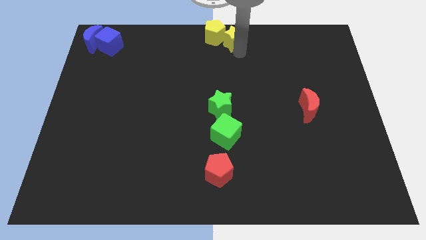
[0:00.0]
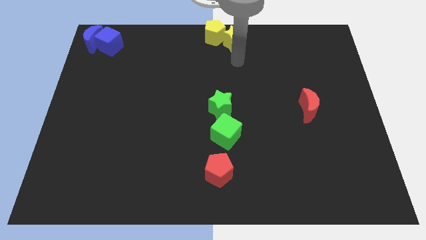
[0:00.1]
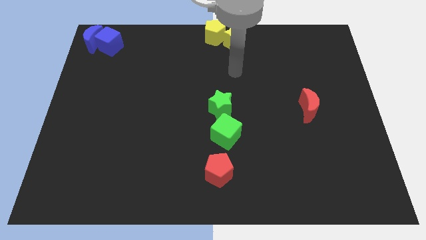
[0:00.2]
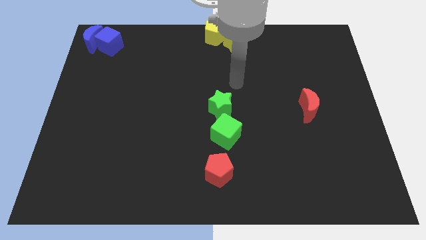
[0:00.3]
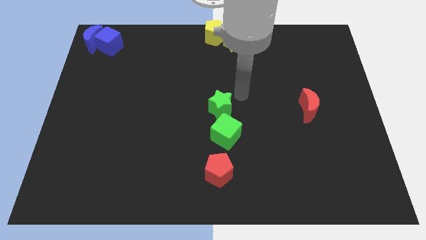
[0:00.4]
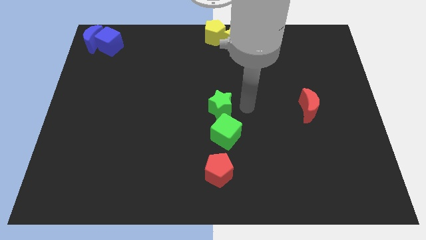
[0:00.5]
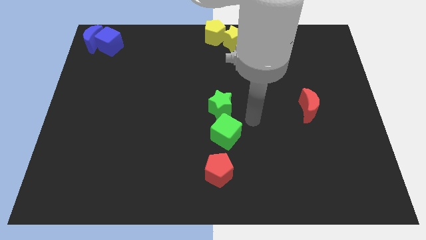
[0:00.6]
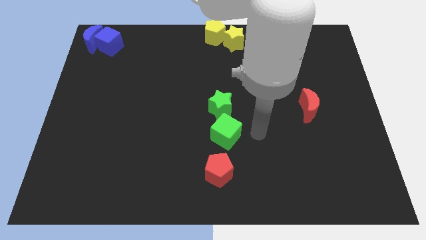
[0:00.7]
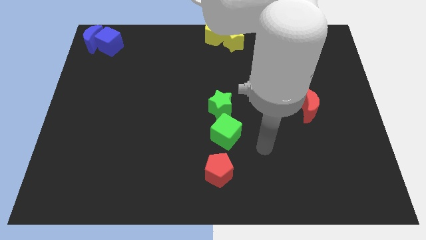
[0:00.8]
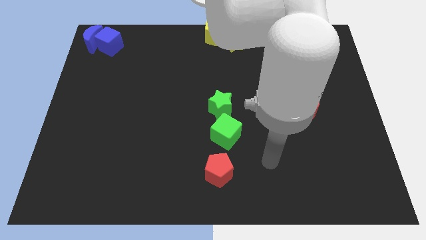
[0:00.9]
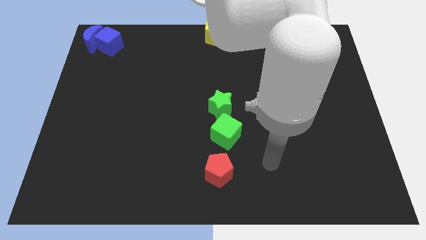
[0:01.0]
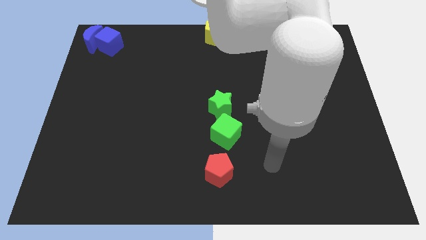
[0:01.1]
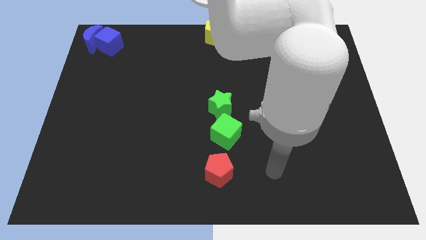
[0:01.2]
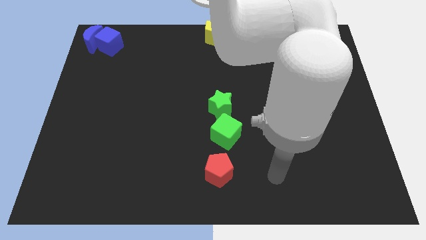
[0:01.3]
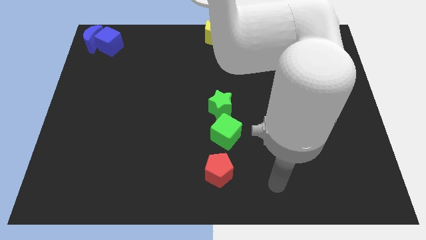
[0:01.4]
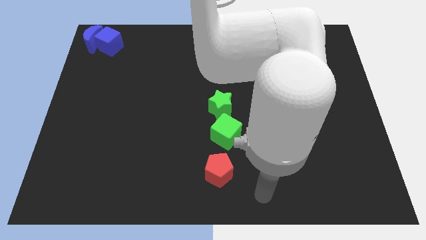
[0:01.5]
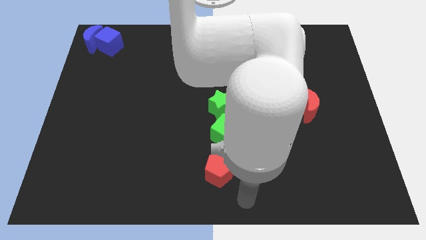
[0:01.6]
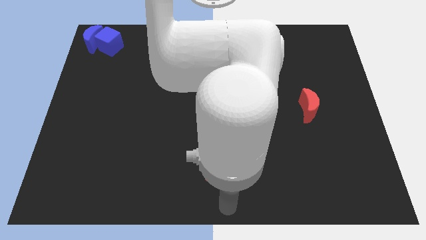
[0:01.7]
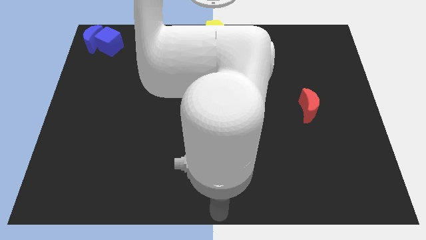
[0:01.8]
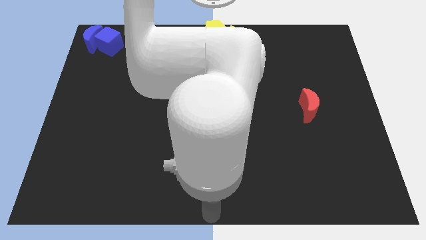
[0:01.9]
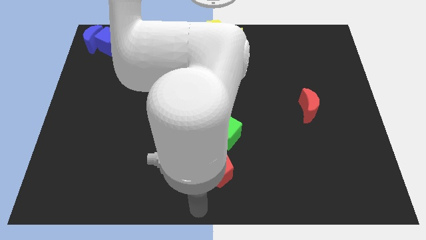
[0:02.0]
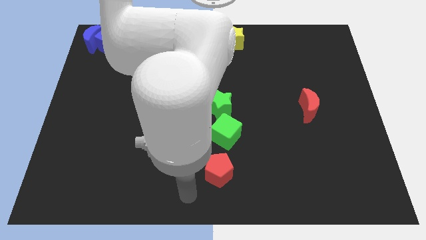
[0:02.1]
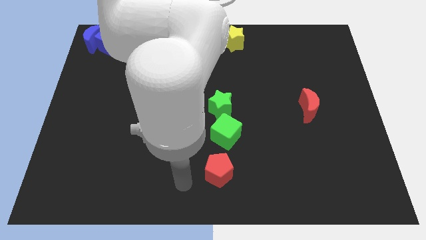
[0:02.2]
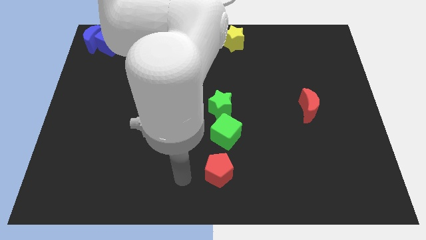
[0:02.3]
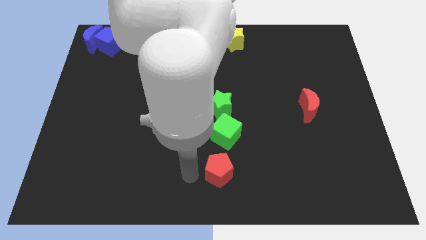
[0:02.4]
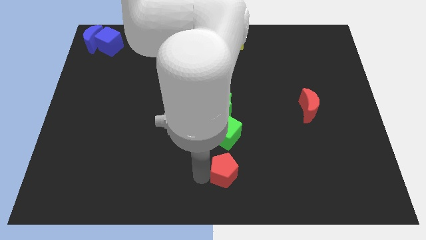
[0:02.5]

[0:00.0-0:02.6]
drag your arm to the left of red pentagon

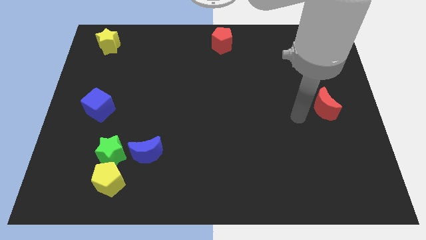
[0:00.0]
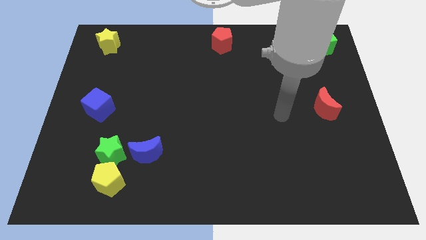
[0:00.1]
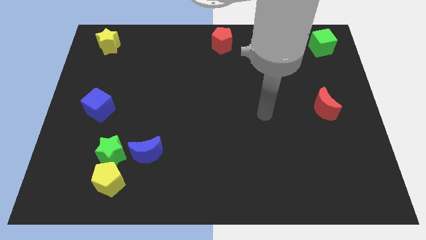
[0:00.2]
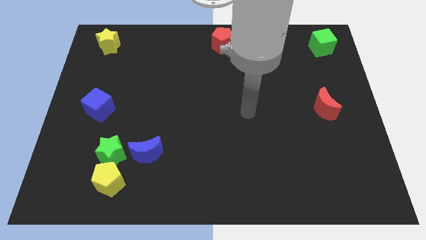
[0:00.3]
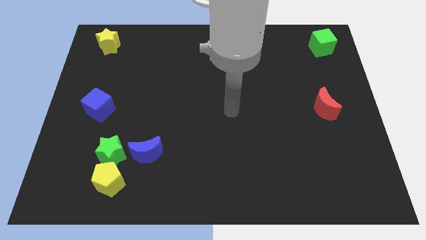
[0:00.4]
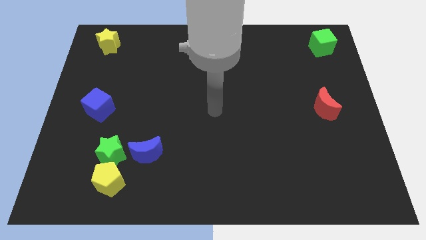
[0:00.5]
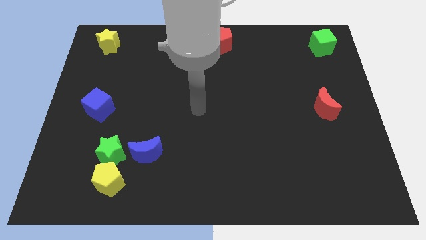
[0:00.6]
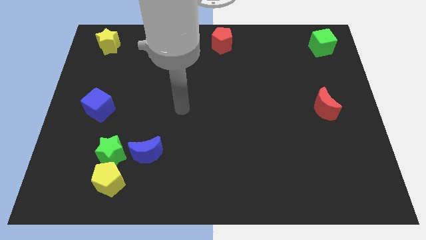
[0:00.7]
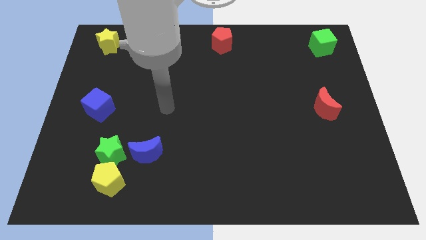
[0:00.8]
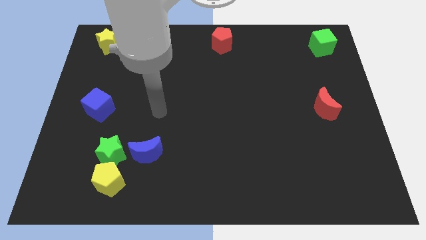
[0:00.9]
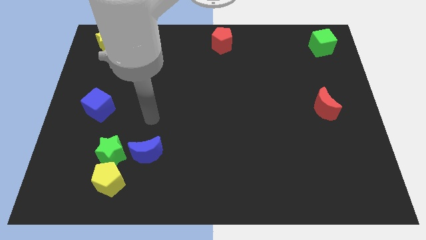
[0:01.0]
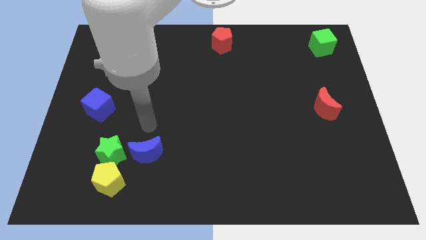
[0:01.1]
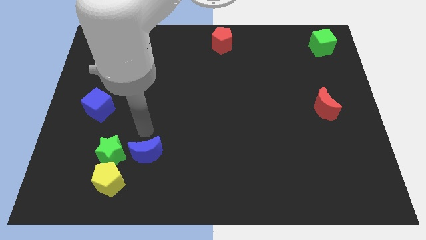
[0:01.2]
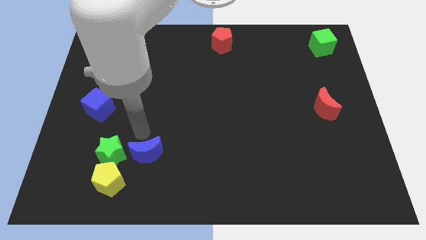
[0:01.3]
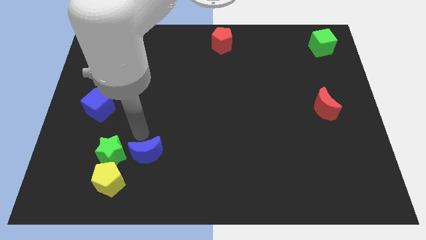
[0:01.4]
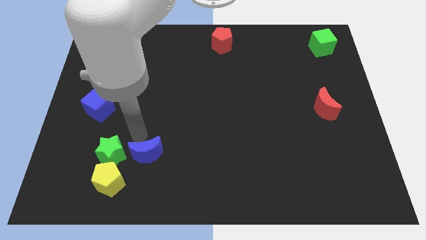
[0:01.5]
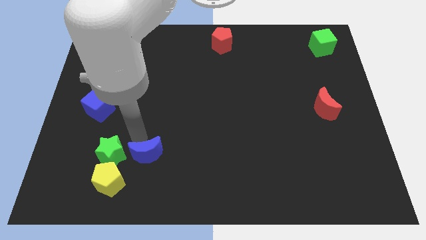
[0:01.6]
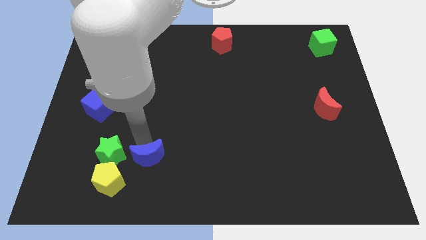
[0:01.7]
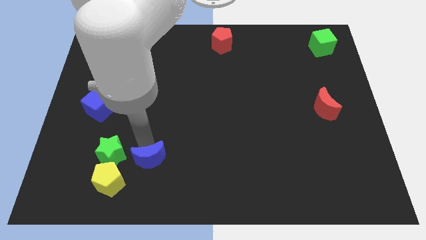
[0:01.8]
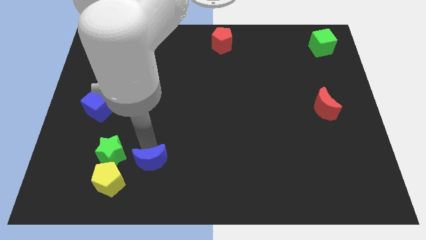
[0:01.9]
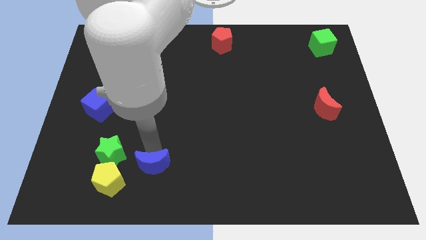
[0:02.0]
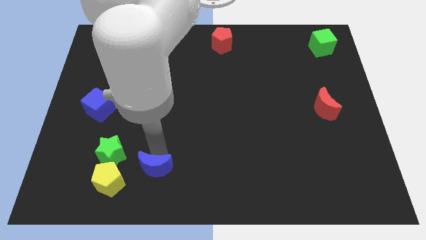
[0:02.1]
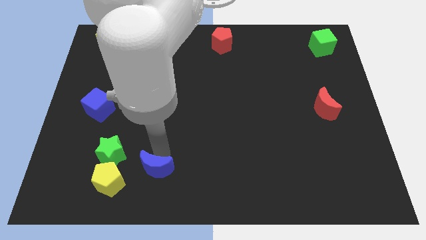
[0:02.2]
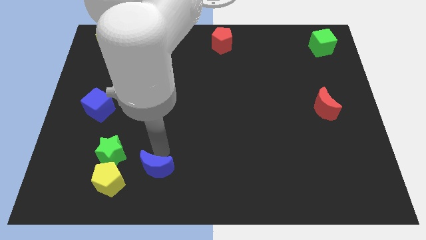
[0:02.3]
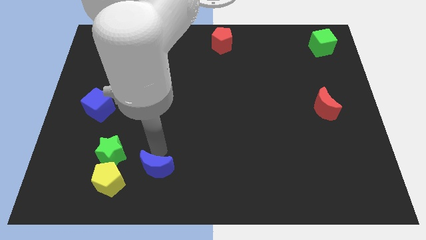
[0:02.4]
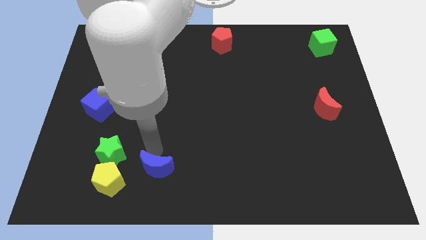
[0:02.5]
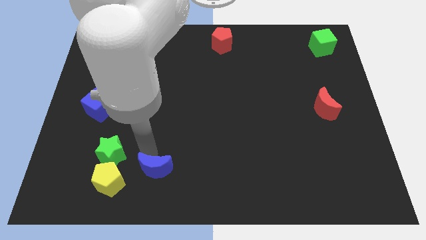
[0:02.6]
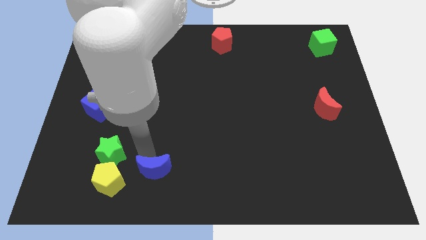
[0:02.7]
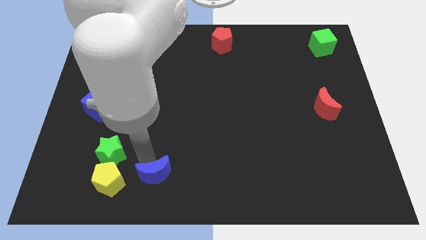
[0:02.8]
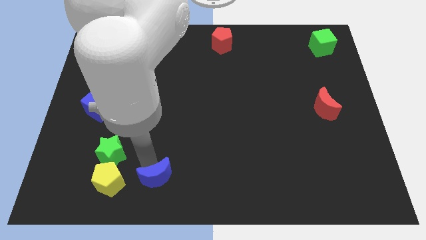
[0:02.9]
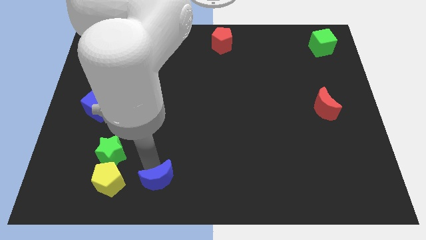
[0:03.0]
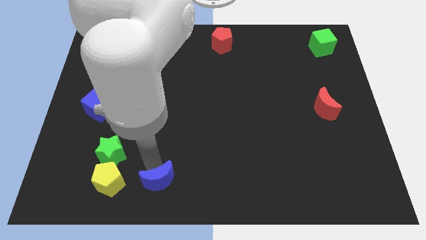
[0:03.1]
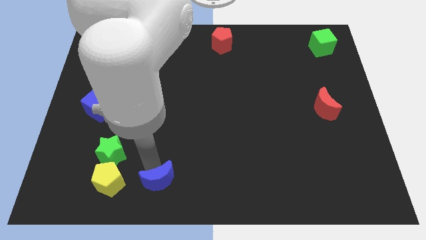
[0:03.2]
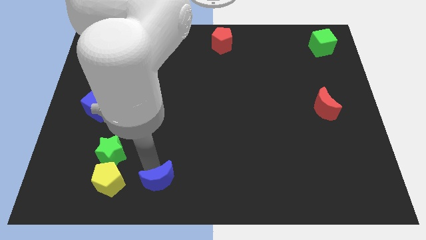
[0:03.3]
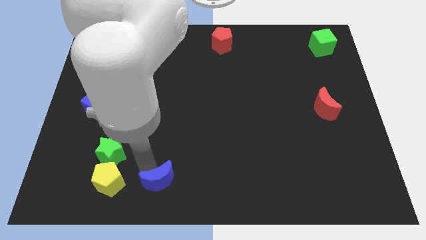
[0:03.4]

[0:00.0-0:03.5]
place the blue moon to the right of the yellow pentagon

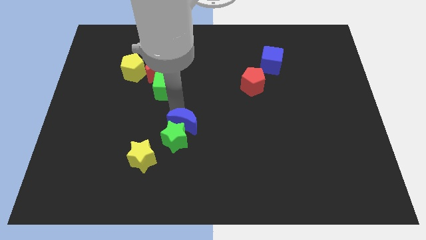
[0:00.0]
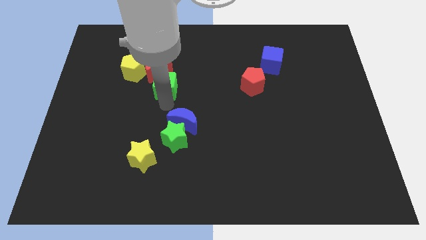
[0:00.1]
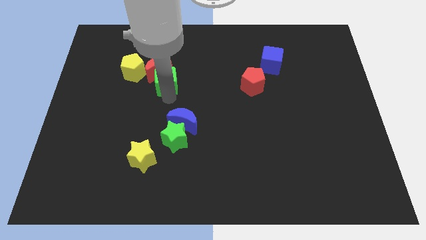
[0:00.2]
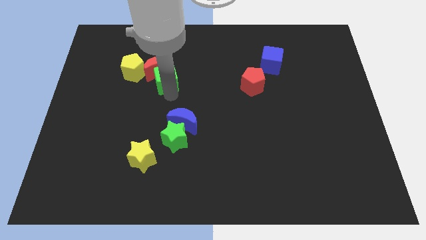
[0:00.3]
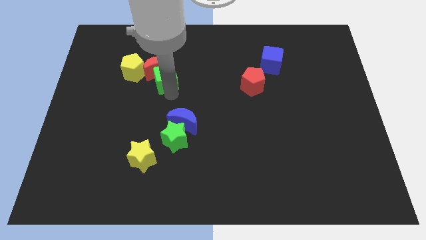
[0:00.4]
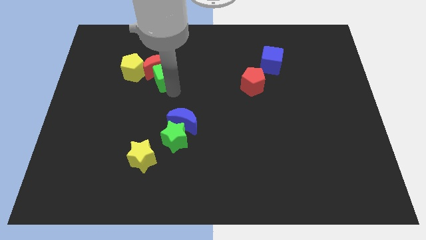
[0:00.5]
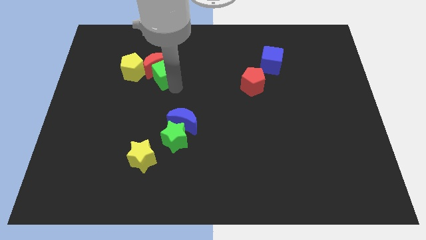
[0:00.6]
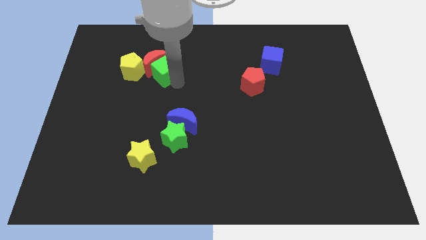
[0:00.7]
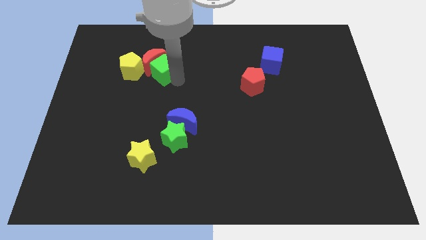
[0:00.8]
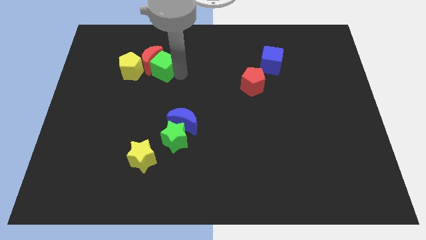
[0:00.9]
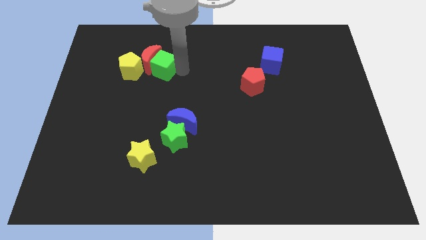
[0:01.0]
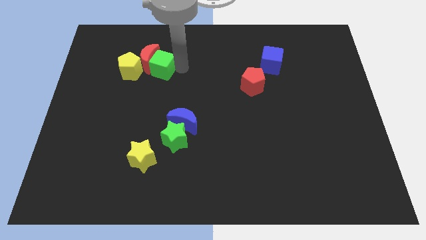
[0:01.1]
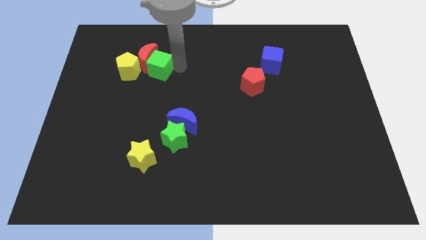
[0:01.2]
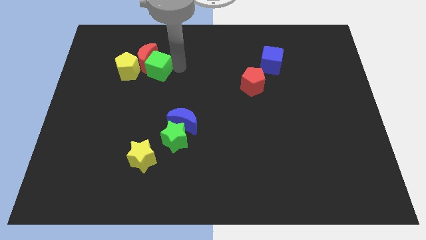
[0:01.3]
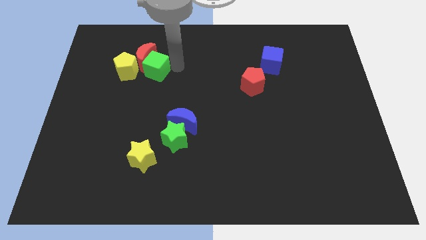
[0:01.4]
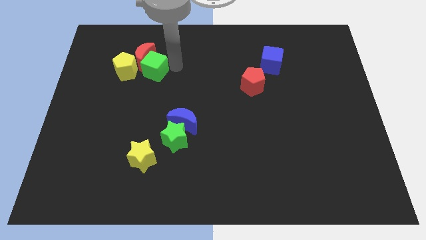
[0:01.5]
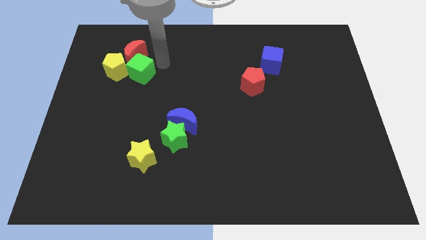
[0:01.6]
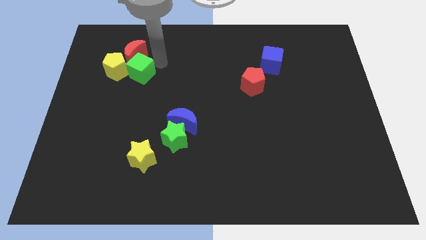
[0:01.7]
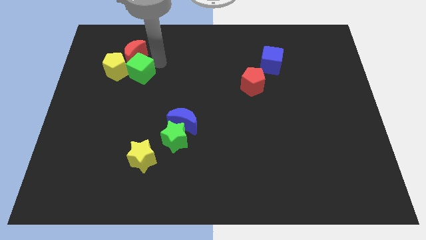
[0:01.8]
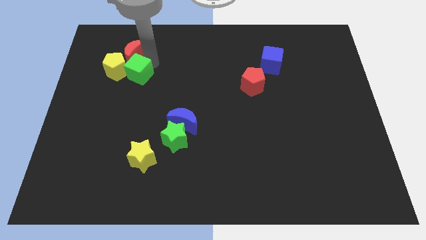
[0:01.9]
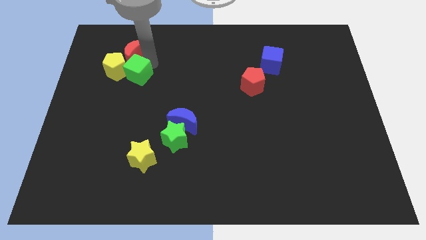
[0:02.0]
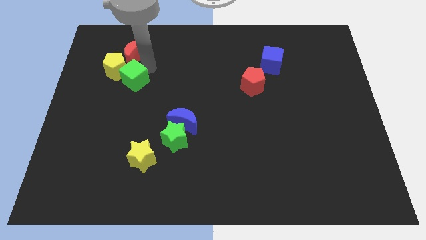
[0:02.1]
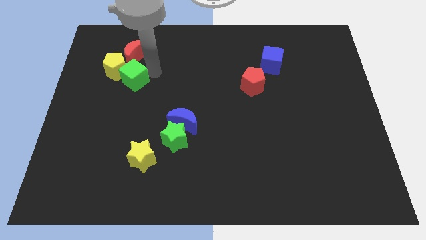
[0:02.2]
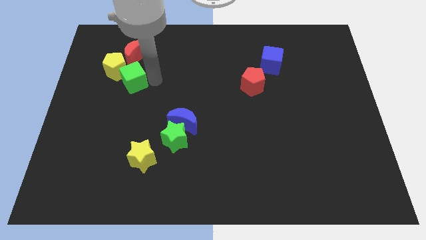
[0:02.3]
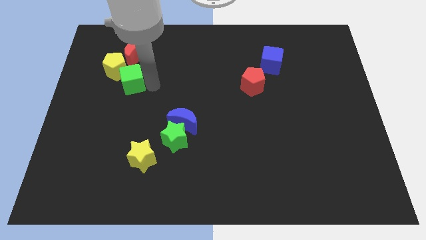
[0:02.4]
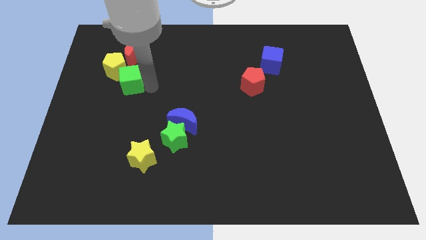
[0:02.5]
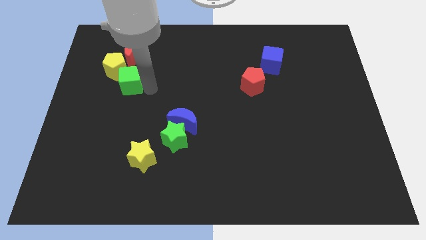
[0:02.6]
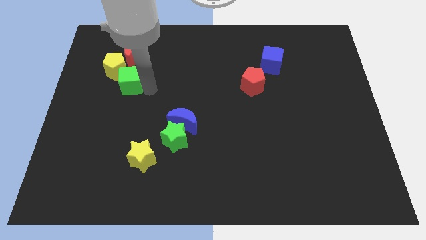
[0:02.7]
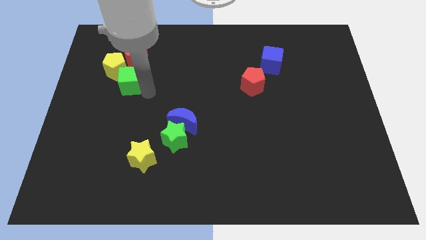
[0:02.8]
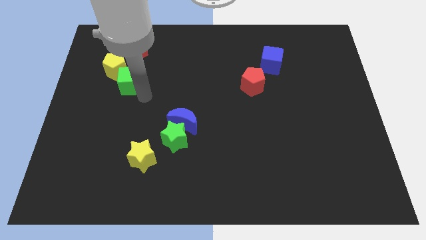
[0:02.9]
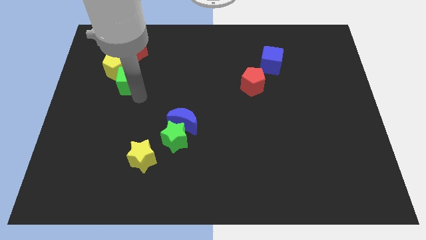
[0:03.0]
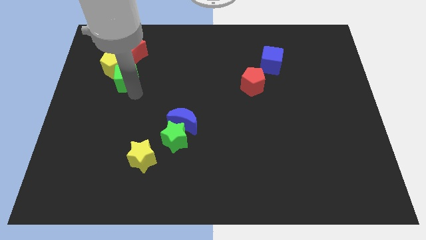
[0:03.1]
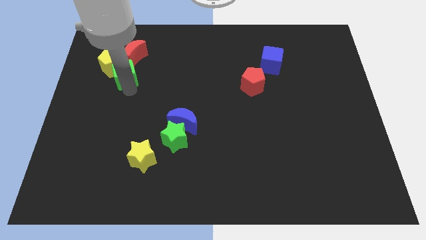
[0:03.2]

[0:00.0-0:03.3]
place the green cube below the yellow pentagon
